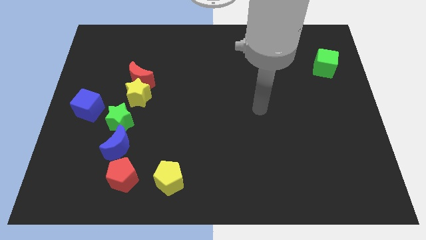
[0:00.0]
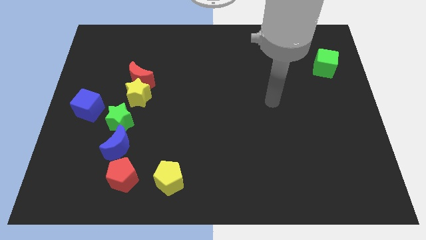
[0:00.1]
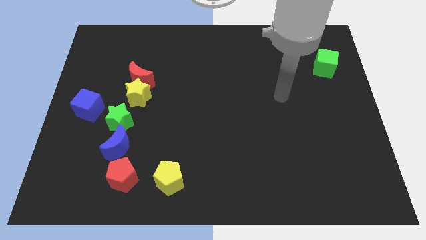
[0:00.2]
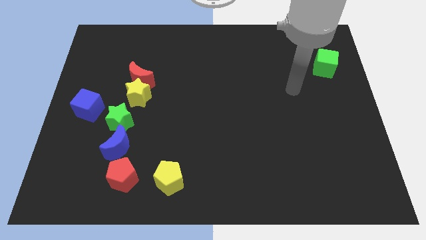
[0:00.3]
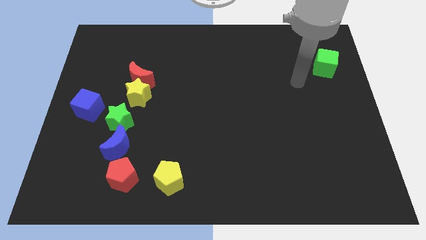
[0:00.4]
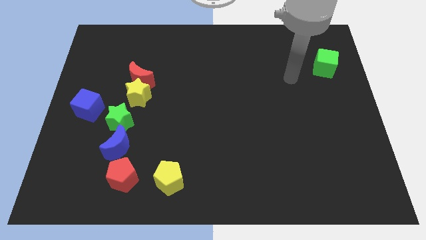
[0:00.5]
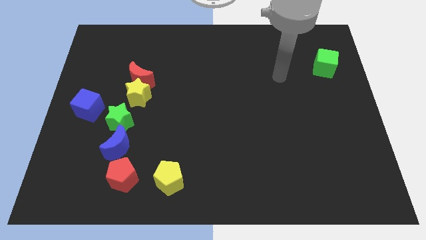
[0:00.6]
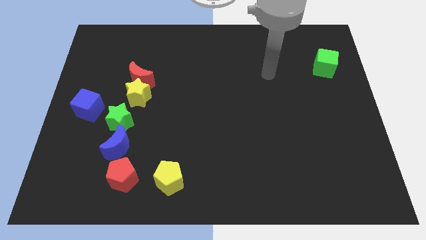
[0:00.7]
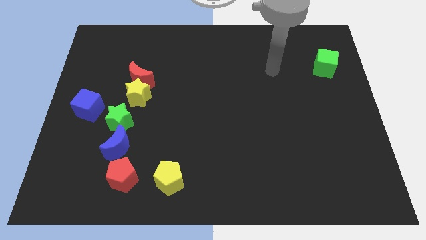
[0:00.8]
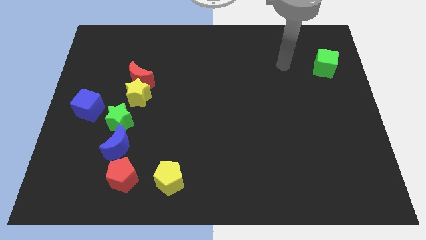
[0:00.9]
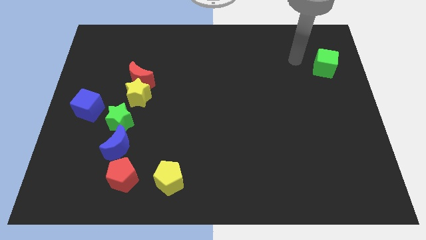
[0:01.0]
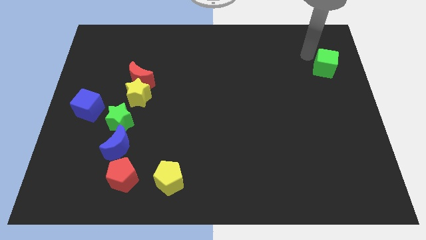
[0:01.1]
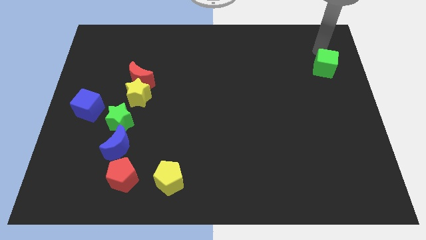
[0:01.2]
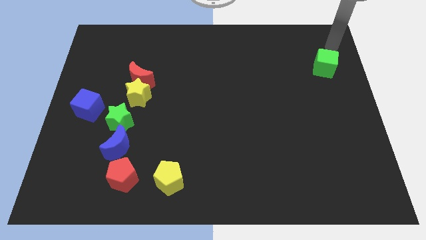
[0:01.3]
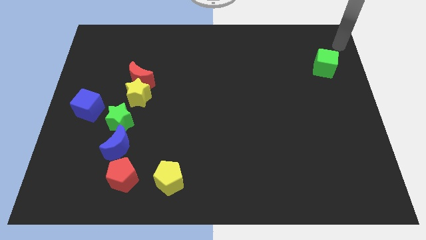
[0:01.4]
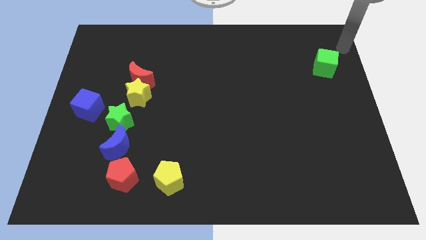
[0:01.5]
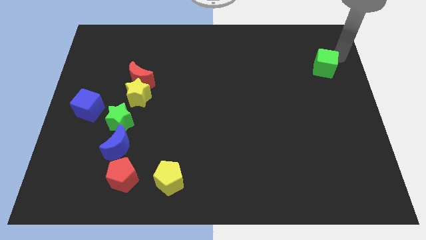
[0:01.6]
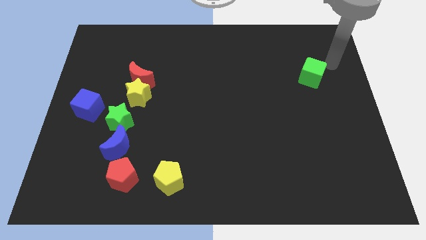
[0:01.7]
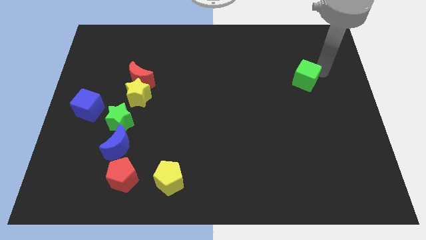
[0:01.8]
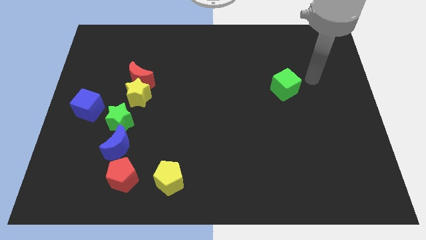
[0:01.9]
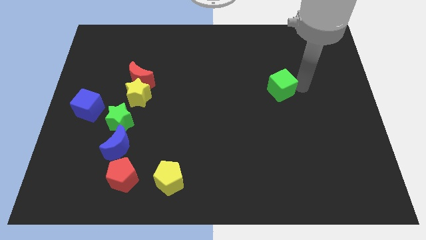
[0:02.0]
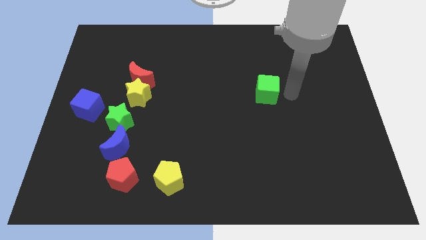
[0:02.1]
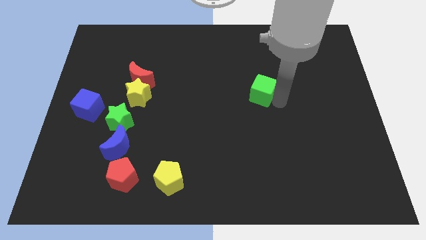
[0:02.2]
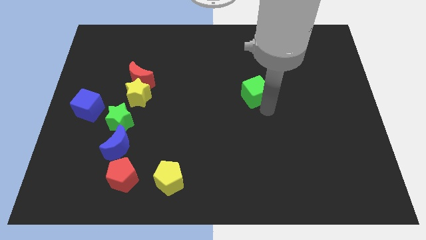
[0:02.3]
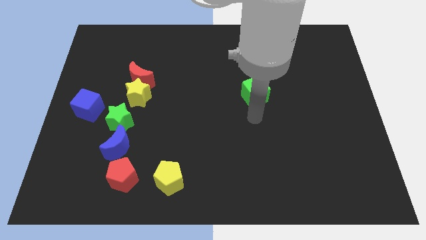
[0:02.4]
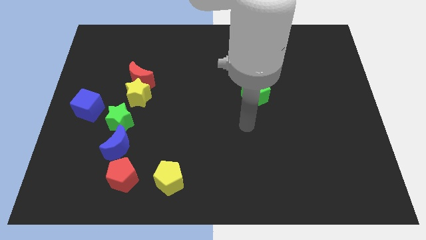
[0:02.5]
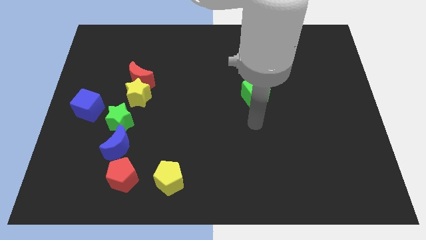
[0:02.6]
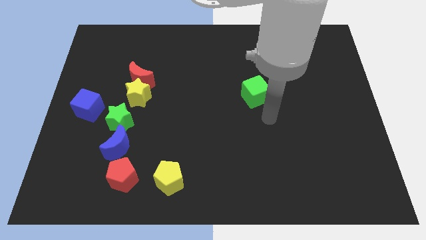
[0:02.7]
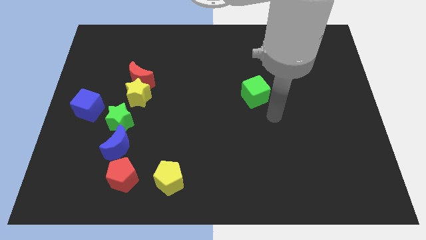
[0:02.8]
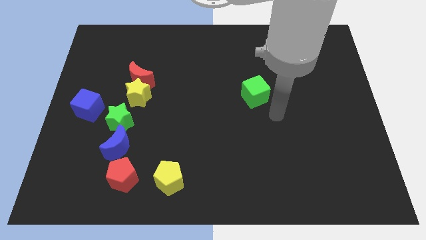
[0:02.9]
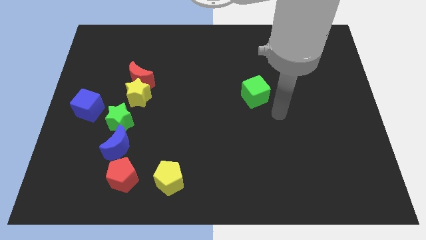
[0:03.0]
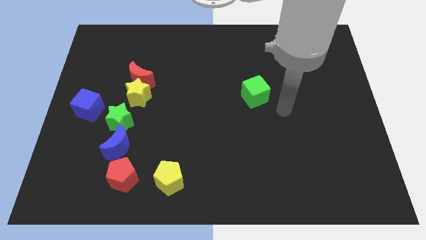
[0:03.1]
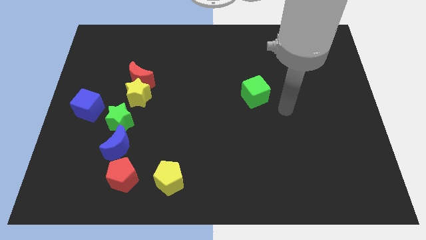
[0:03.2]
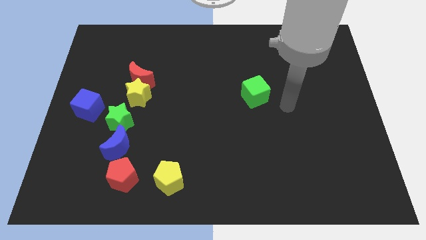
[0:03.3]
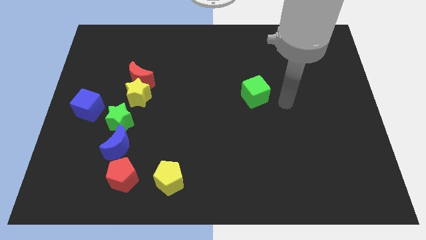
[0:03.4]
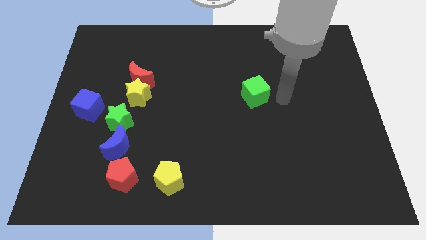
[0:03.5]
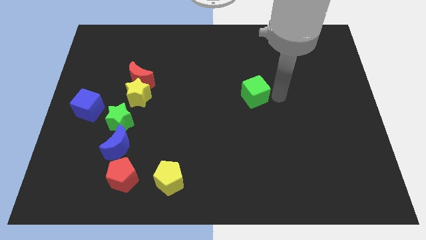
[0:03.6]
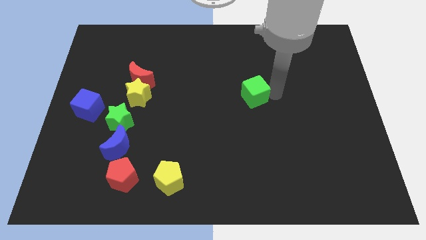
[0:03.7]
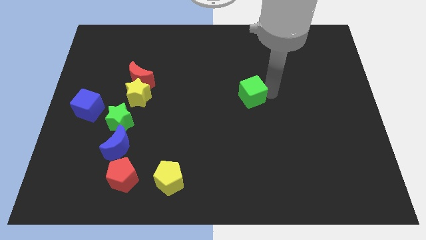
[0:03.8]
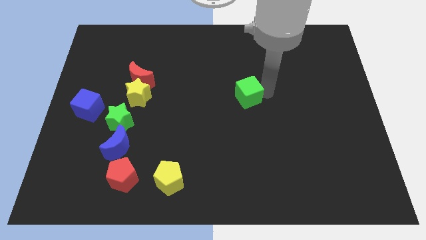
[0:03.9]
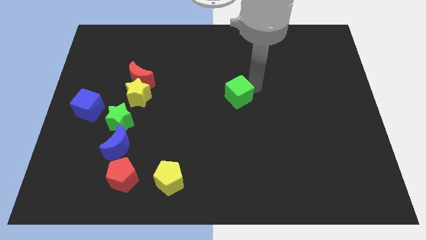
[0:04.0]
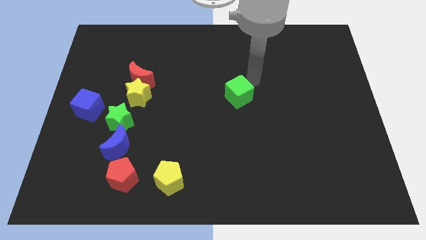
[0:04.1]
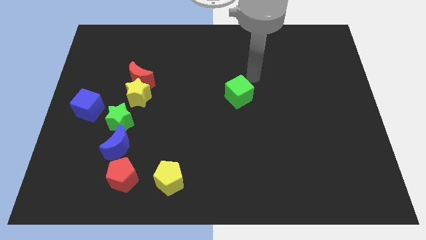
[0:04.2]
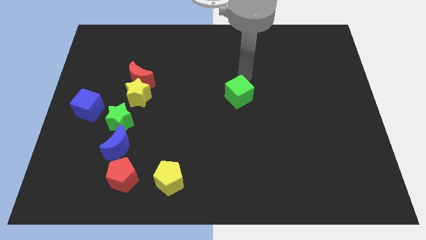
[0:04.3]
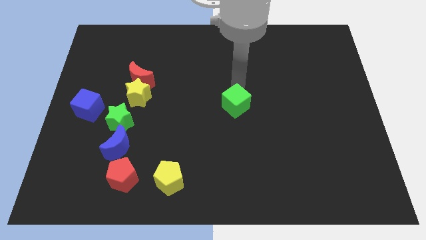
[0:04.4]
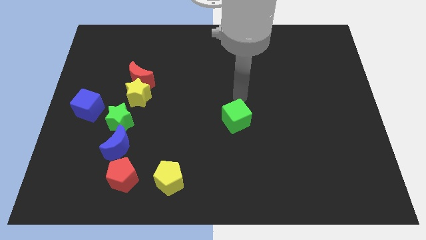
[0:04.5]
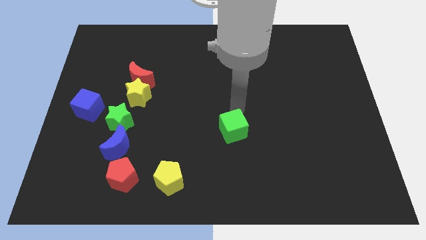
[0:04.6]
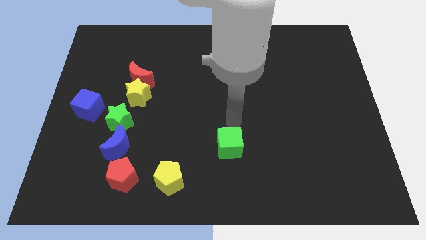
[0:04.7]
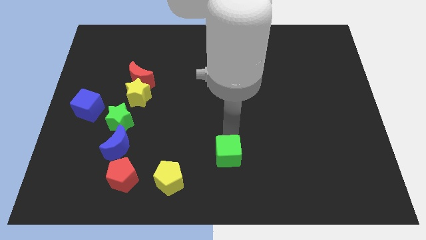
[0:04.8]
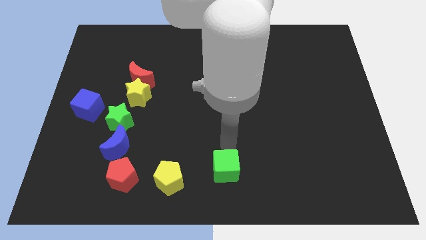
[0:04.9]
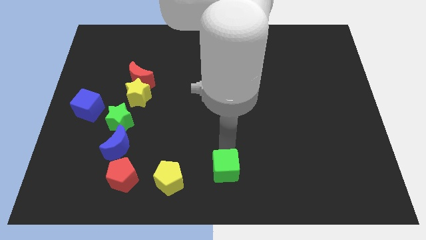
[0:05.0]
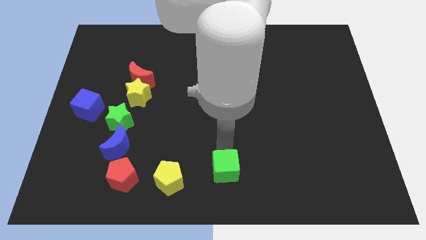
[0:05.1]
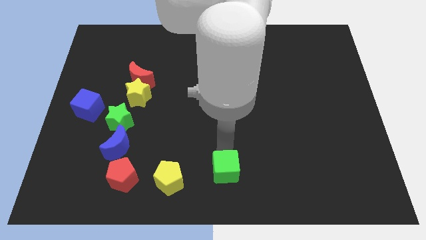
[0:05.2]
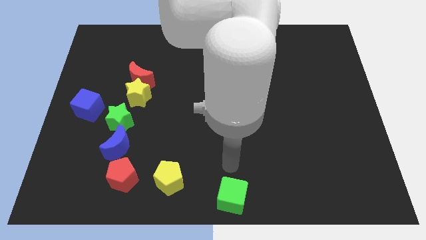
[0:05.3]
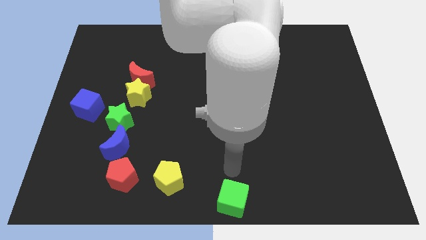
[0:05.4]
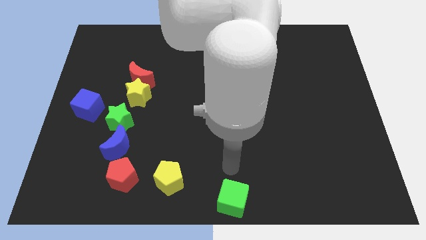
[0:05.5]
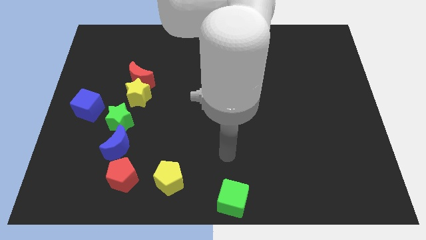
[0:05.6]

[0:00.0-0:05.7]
move the green cube towards the right side of yellow penatgon

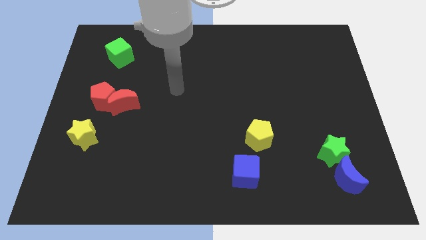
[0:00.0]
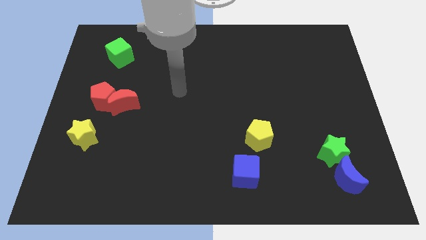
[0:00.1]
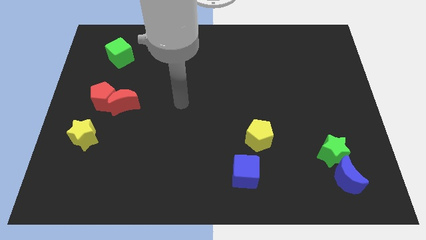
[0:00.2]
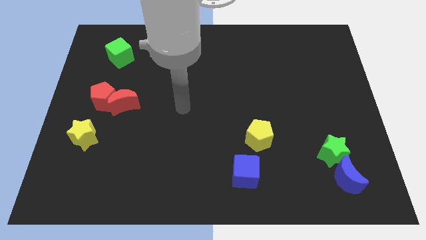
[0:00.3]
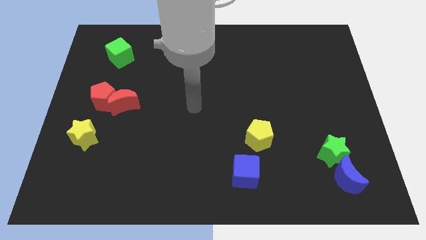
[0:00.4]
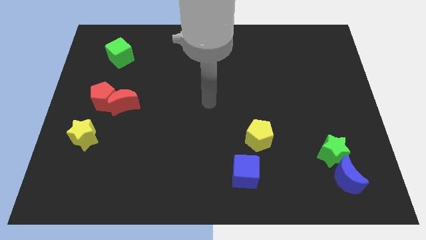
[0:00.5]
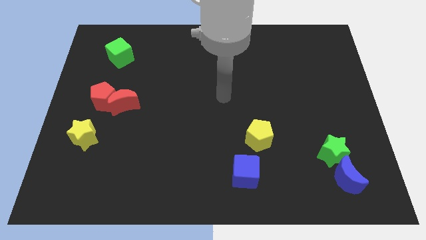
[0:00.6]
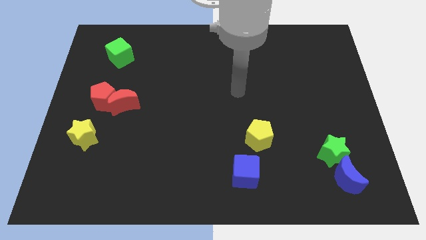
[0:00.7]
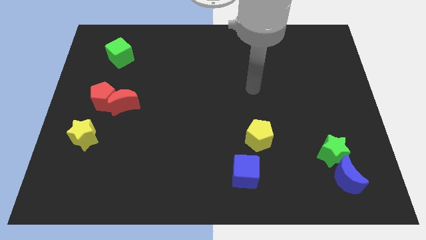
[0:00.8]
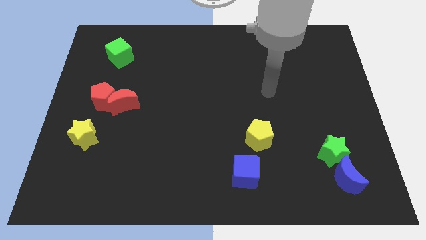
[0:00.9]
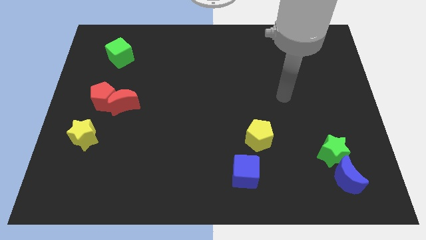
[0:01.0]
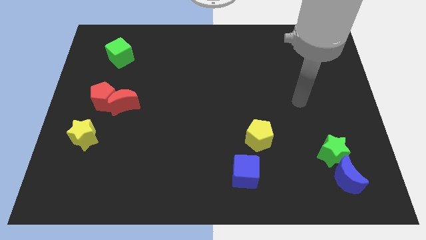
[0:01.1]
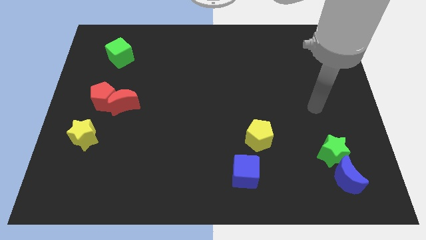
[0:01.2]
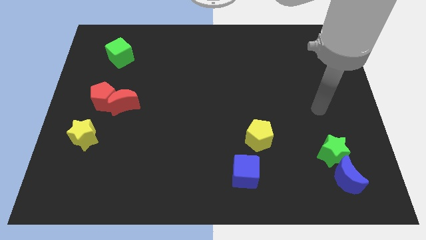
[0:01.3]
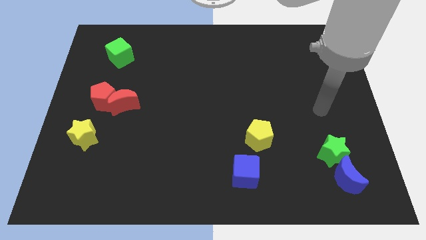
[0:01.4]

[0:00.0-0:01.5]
point your hand above the green star

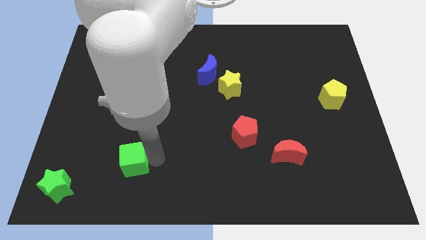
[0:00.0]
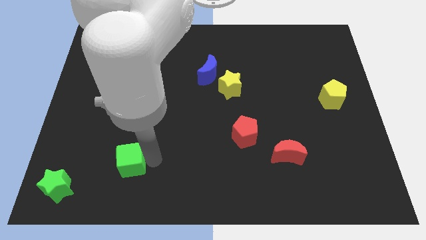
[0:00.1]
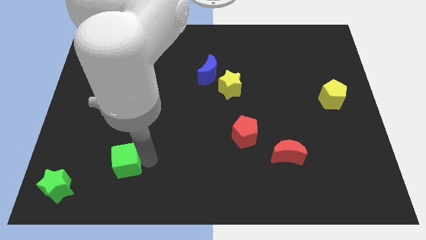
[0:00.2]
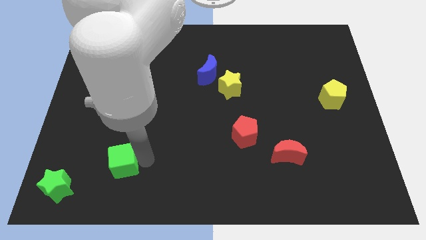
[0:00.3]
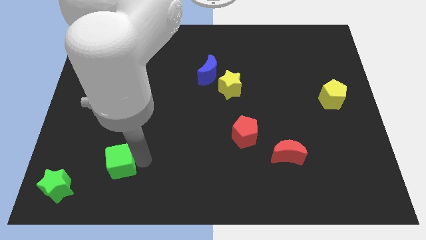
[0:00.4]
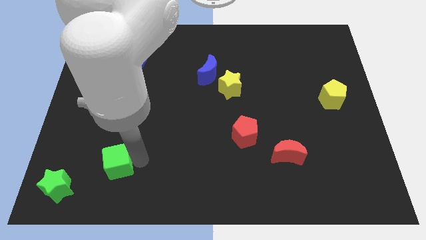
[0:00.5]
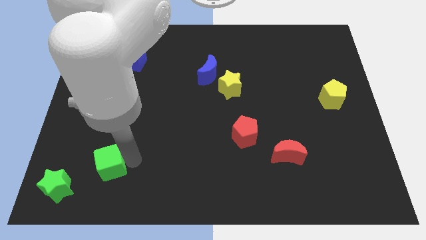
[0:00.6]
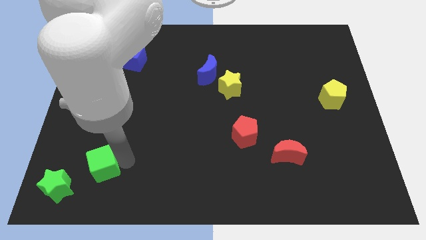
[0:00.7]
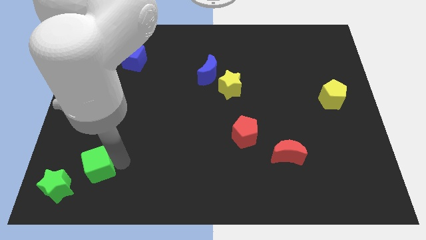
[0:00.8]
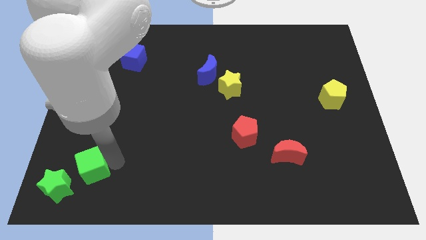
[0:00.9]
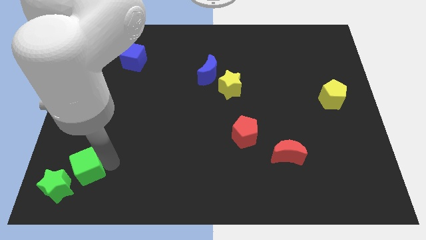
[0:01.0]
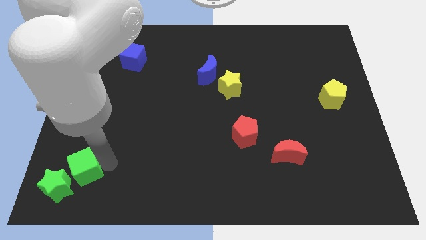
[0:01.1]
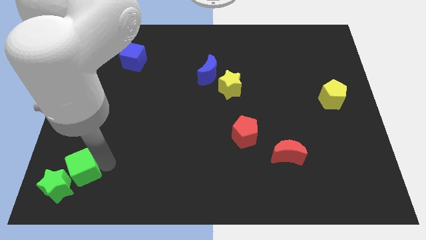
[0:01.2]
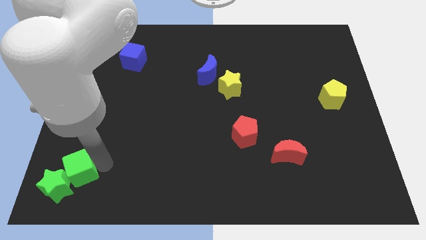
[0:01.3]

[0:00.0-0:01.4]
move the green cube into the right side of the green star

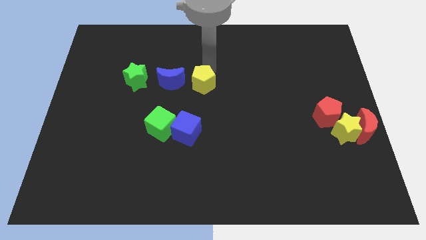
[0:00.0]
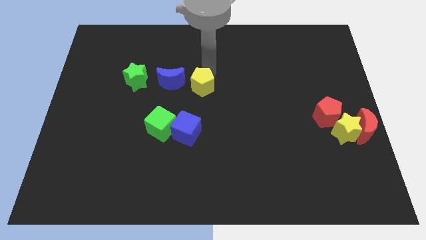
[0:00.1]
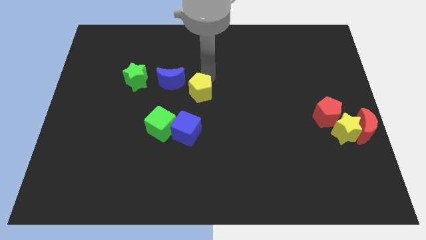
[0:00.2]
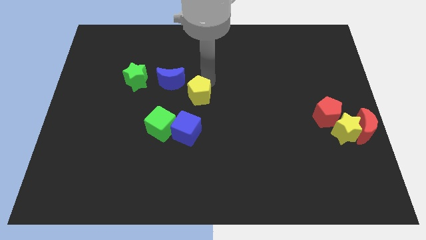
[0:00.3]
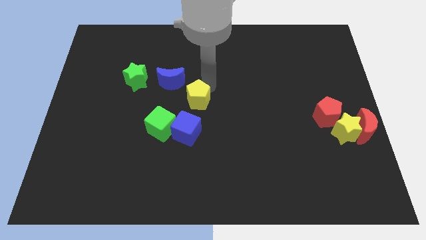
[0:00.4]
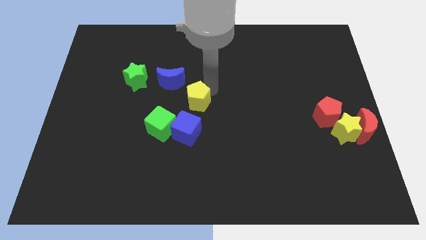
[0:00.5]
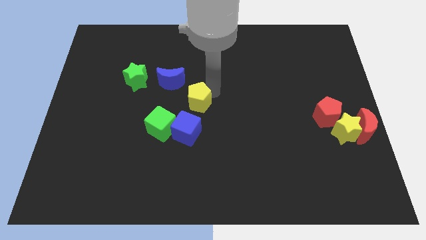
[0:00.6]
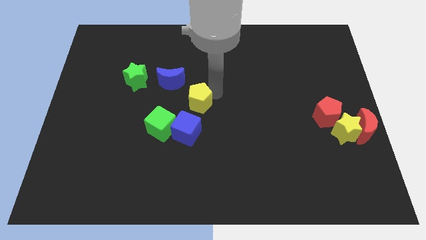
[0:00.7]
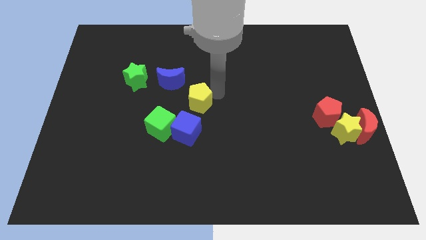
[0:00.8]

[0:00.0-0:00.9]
move the yellow pentagon above the blue cube
